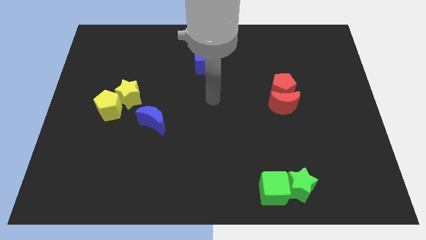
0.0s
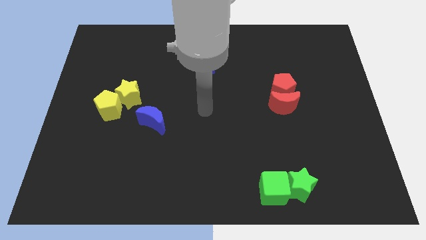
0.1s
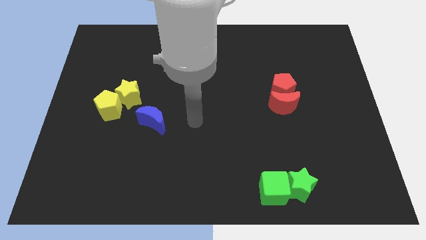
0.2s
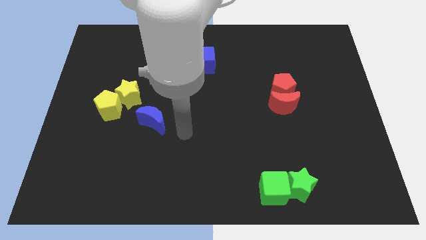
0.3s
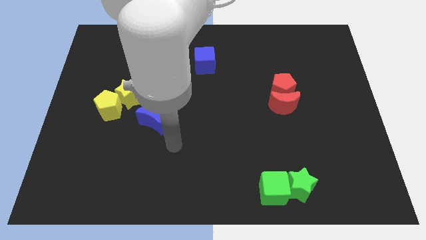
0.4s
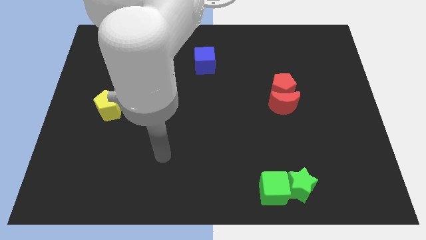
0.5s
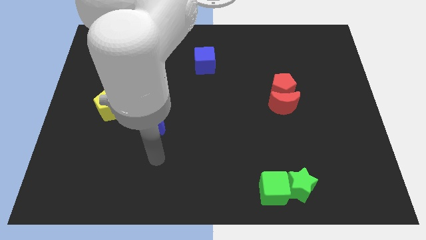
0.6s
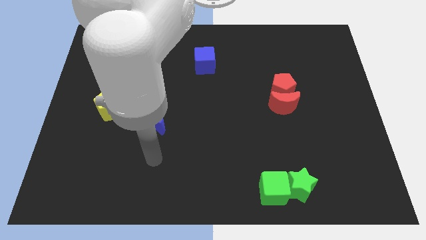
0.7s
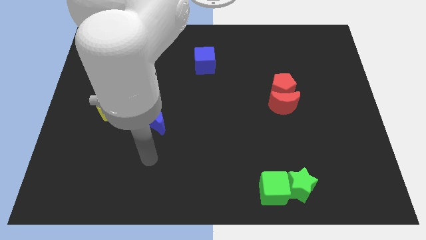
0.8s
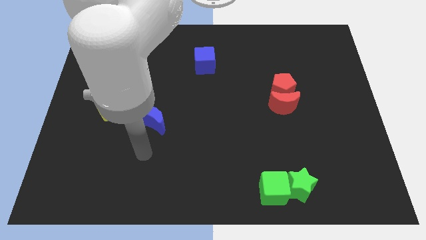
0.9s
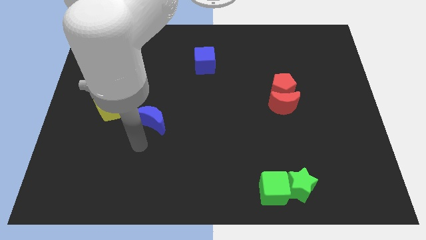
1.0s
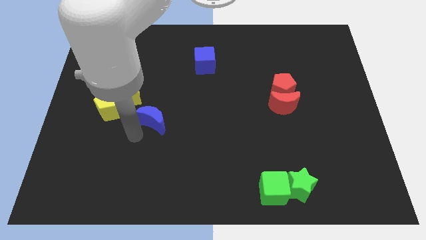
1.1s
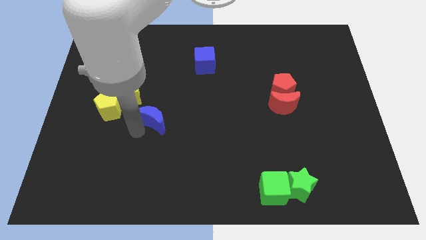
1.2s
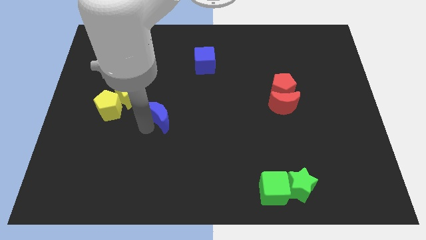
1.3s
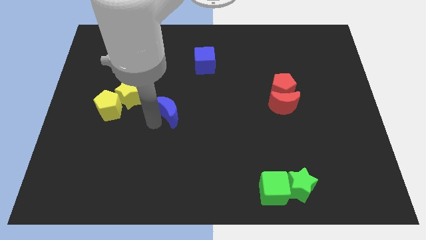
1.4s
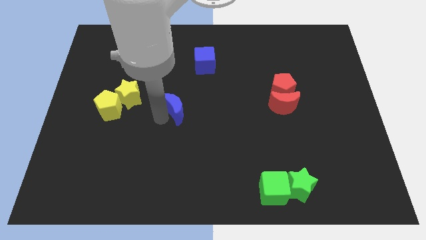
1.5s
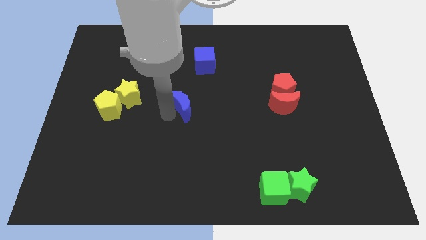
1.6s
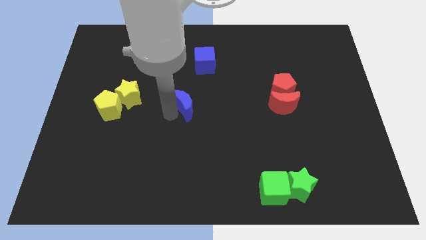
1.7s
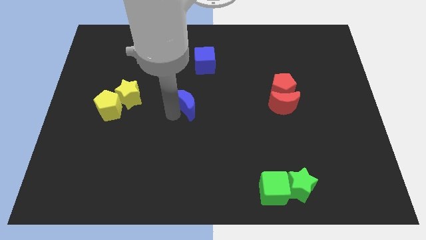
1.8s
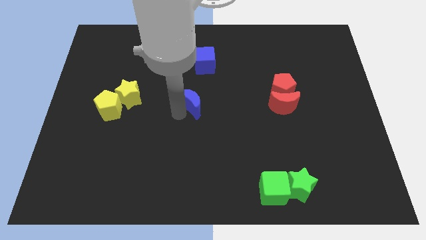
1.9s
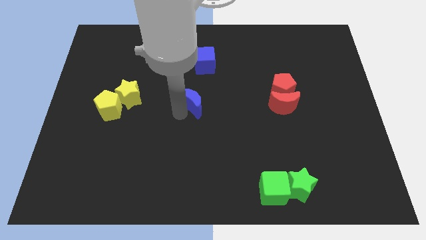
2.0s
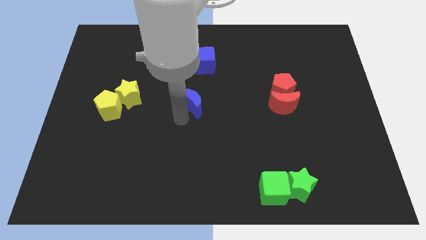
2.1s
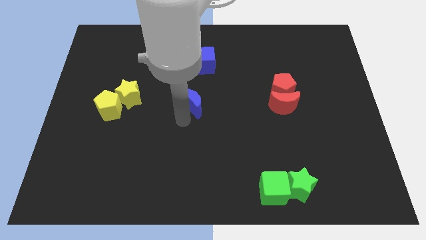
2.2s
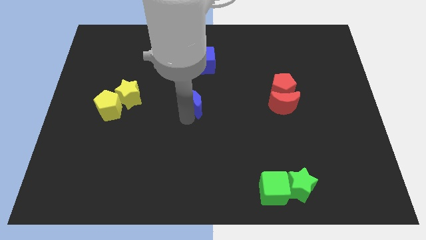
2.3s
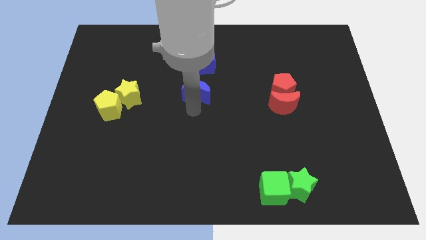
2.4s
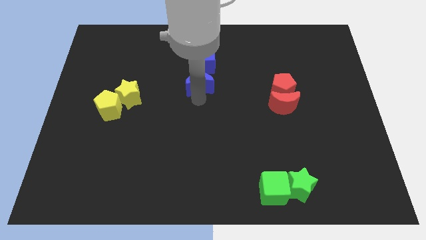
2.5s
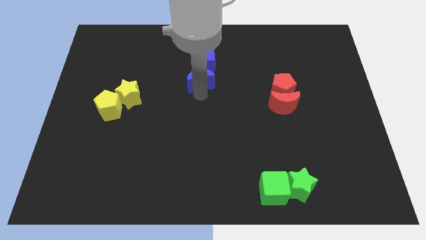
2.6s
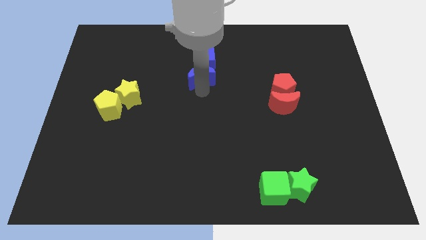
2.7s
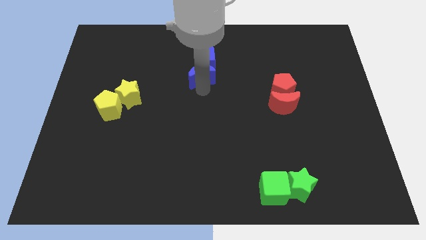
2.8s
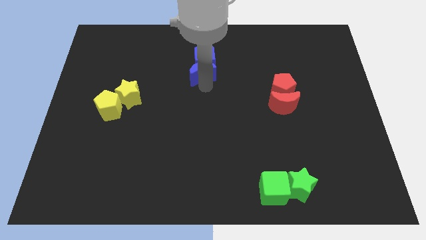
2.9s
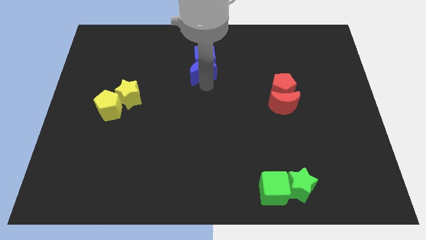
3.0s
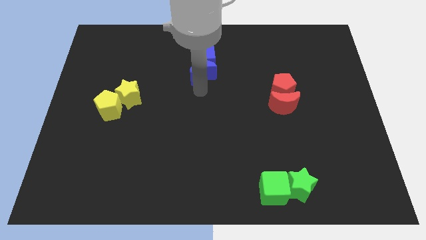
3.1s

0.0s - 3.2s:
place the blue crescent to the bottom of the blue cube

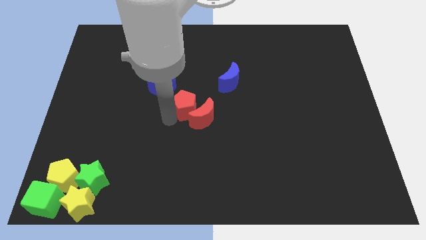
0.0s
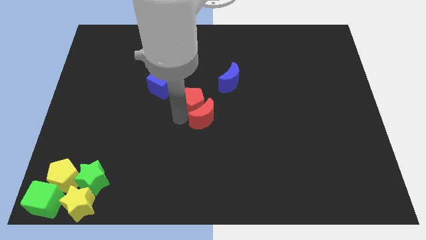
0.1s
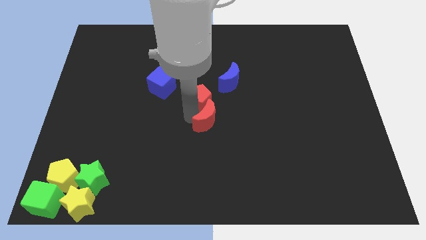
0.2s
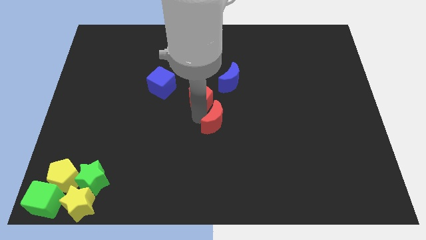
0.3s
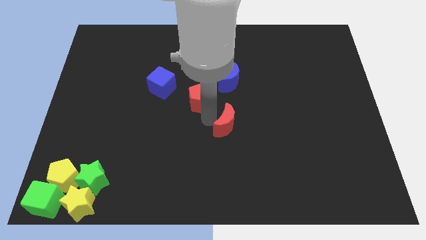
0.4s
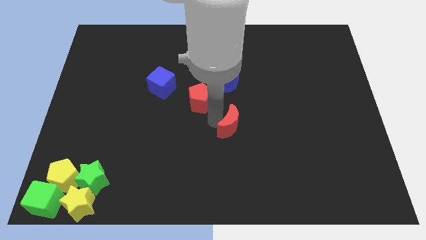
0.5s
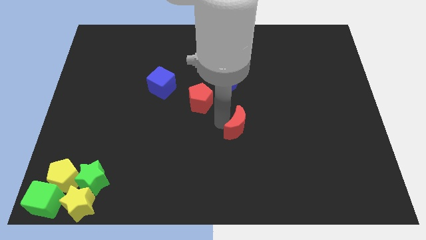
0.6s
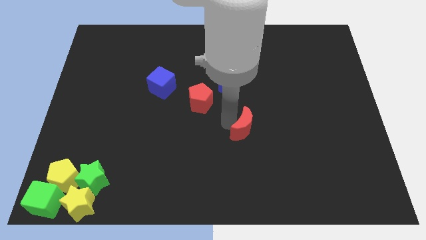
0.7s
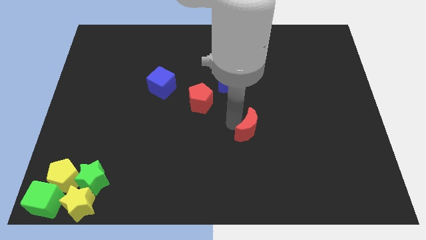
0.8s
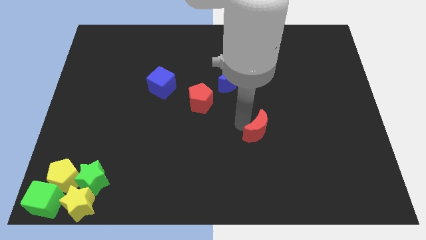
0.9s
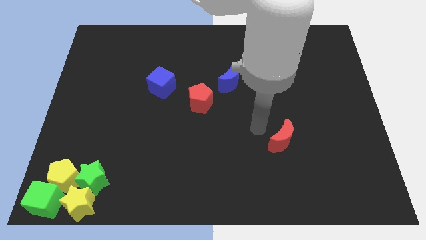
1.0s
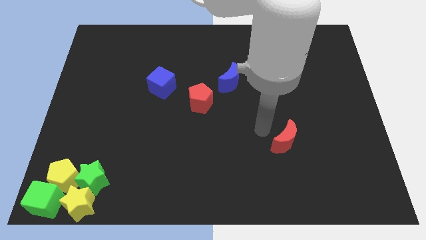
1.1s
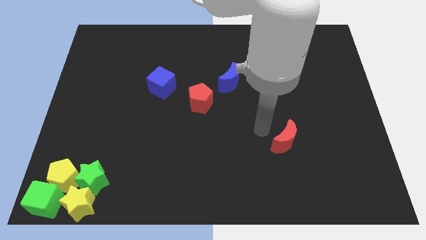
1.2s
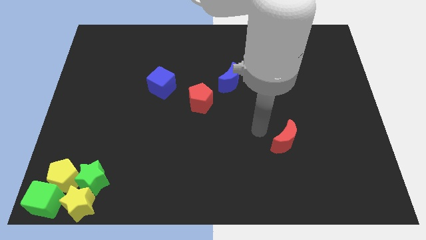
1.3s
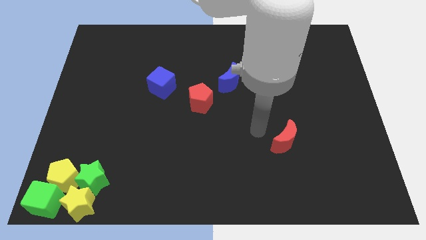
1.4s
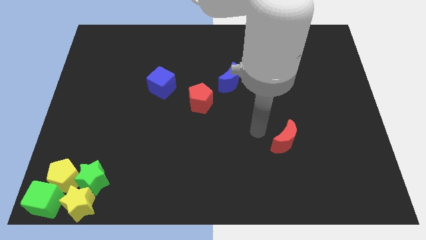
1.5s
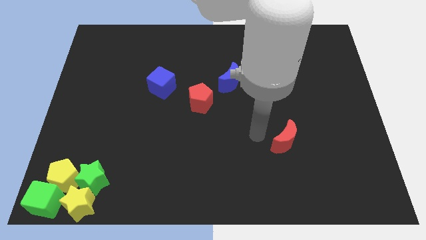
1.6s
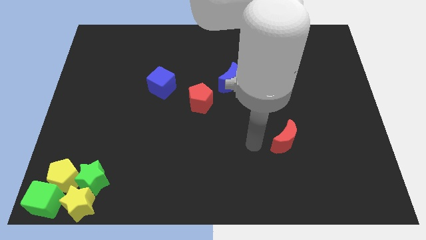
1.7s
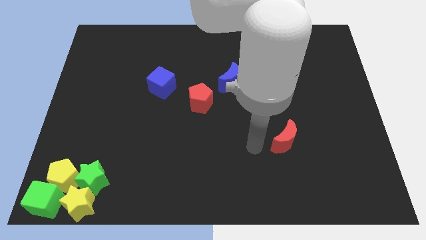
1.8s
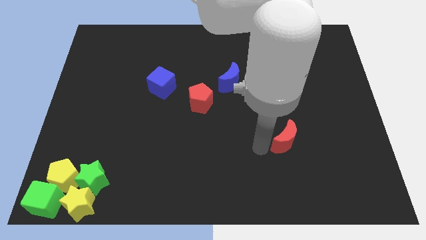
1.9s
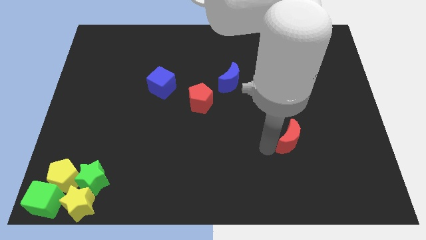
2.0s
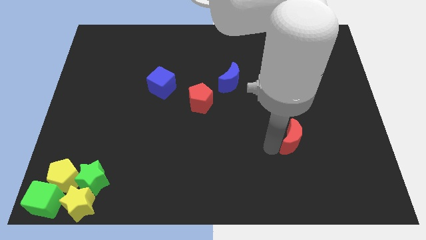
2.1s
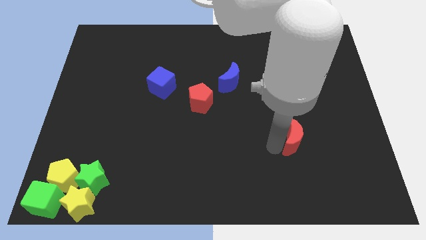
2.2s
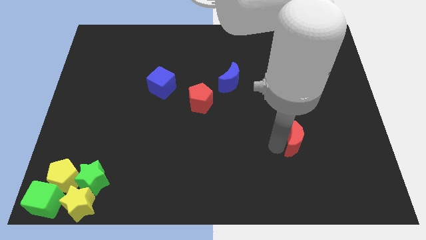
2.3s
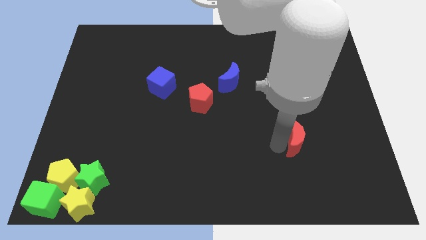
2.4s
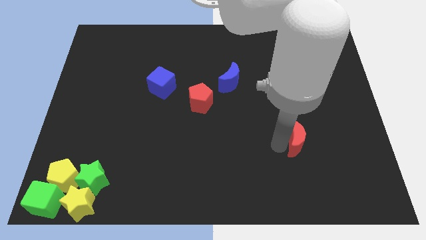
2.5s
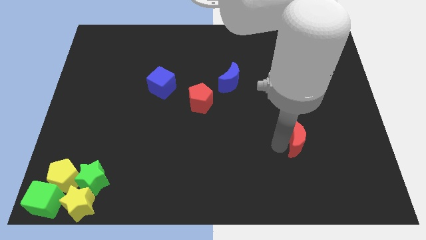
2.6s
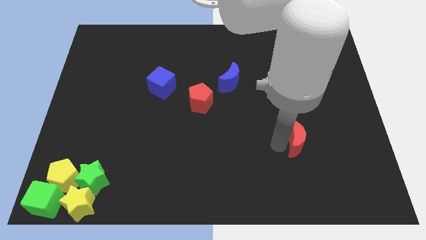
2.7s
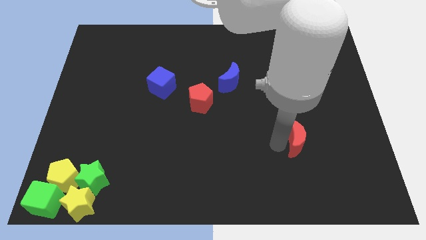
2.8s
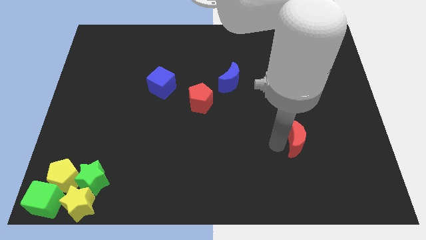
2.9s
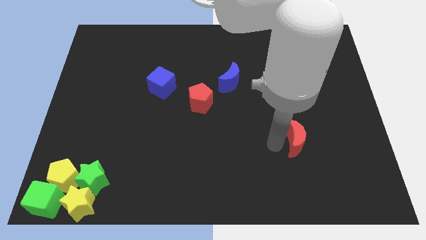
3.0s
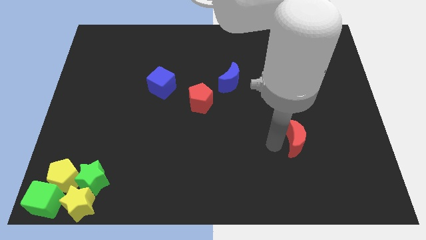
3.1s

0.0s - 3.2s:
separate red moon from red pentagon

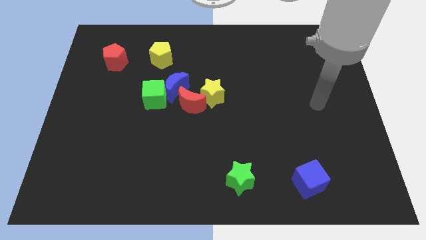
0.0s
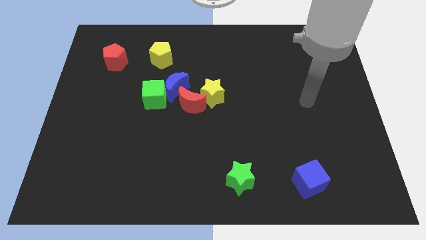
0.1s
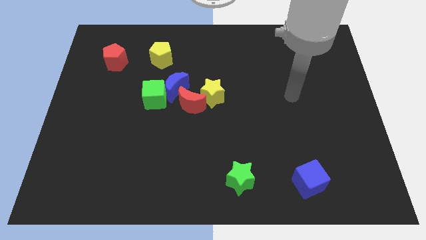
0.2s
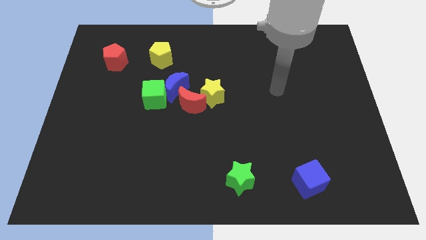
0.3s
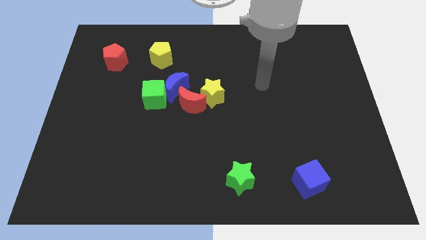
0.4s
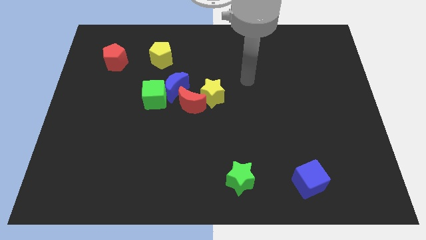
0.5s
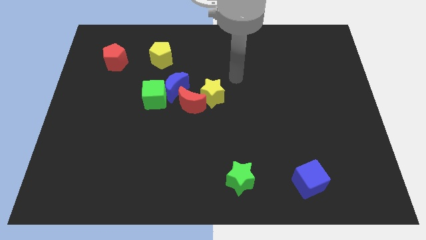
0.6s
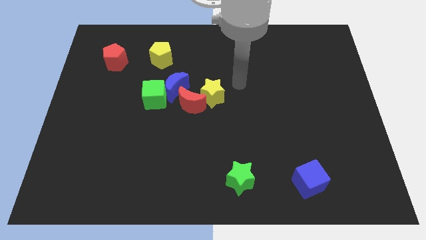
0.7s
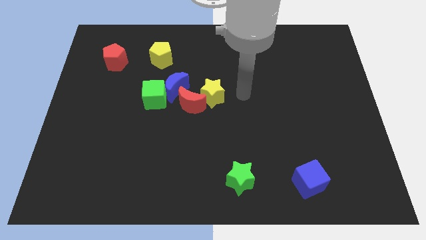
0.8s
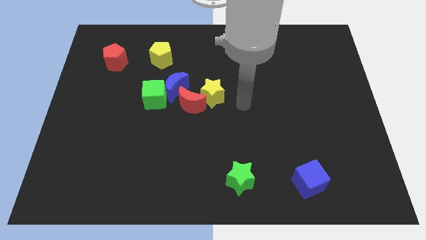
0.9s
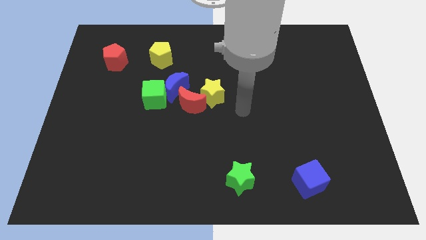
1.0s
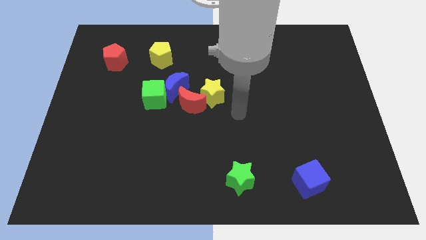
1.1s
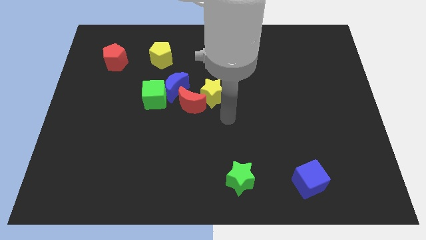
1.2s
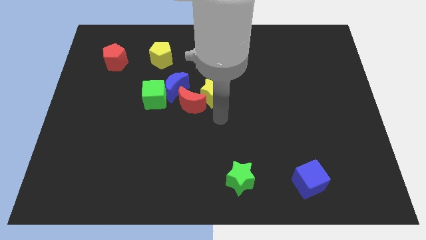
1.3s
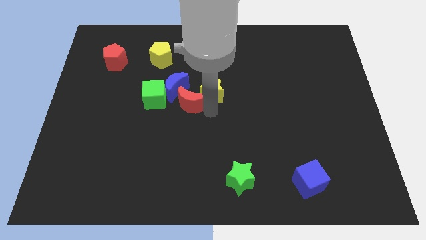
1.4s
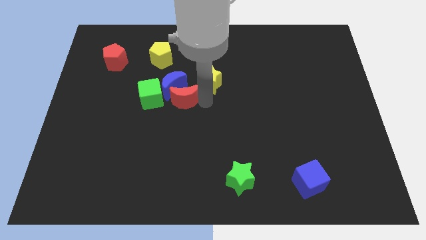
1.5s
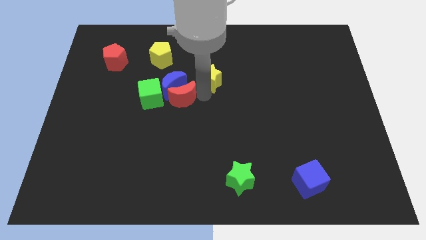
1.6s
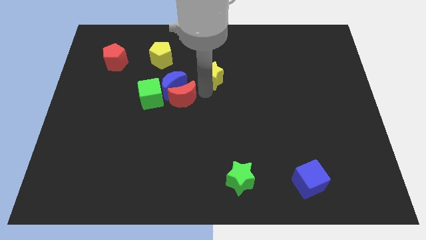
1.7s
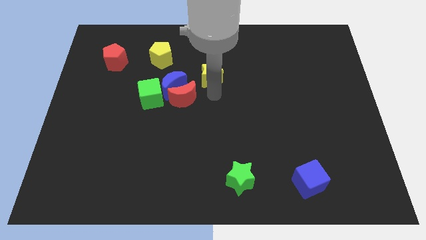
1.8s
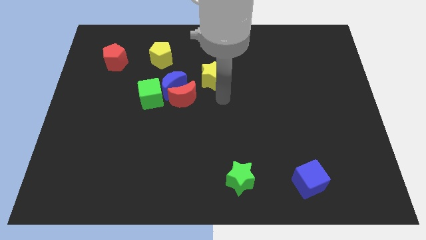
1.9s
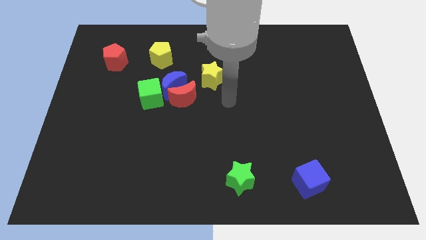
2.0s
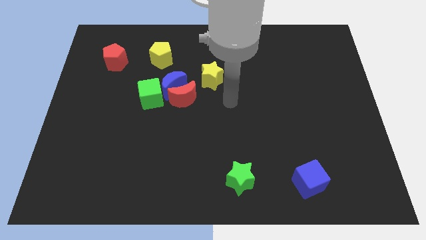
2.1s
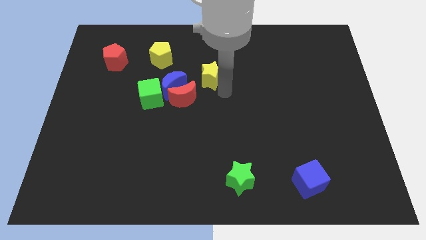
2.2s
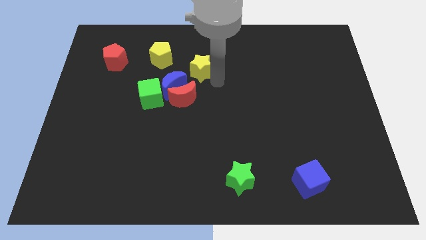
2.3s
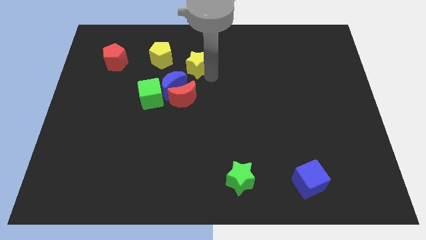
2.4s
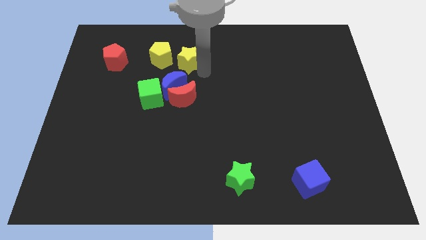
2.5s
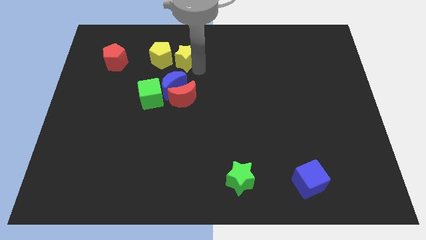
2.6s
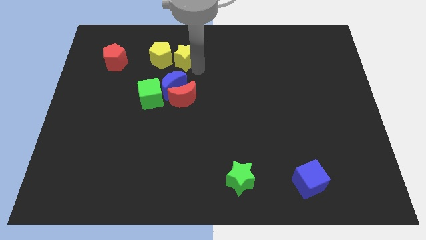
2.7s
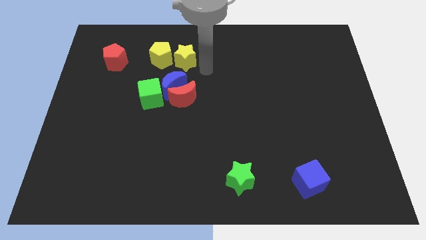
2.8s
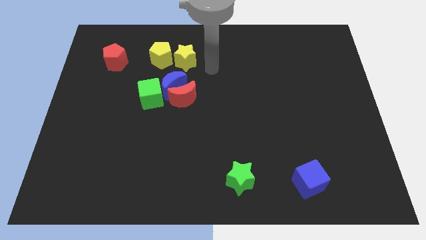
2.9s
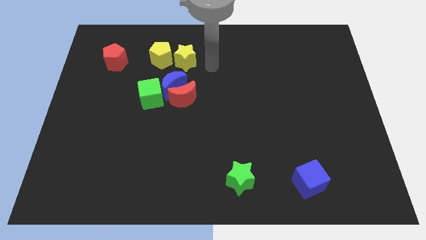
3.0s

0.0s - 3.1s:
push the yellow star close to the yellow pentagon
